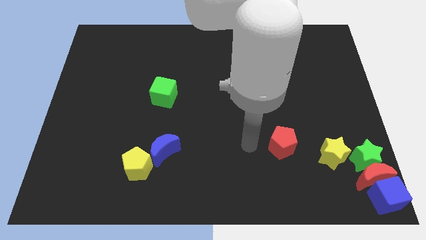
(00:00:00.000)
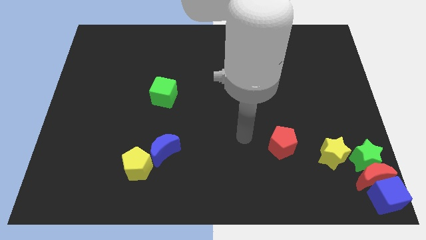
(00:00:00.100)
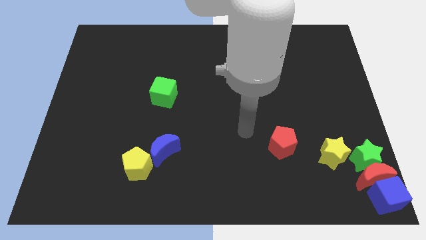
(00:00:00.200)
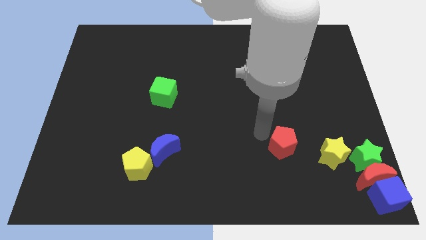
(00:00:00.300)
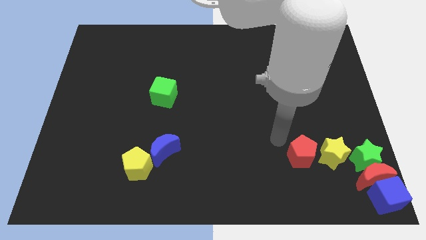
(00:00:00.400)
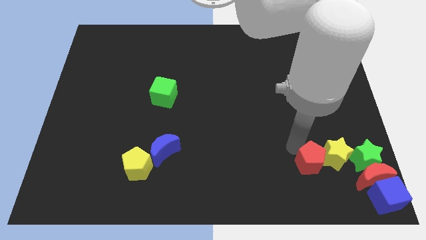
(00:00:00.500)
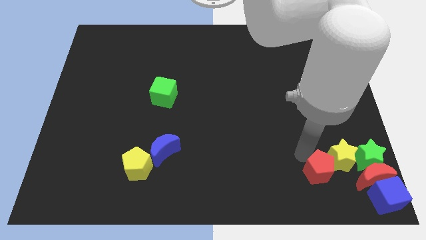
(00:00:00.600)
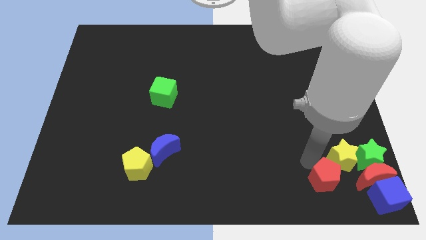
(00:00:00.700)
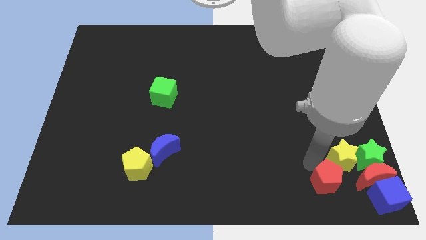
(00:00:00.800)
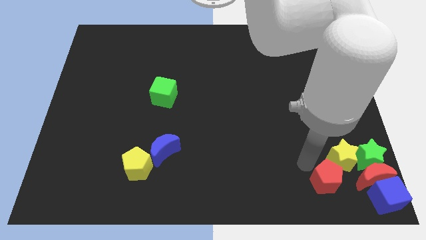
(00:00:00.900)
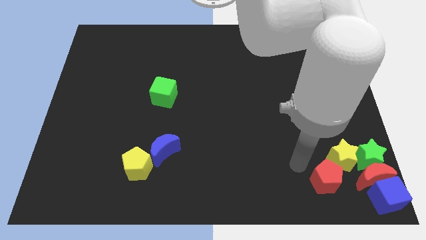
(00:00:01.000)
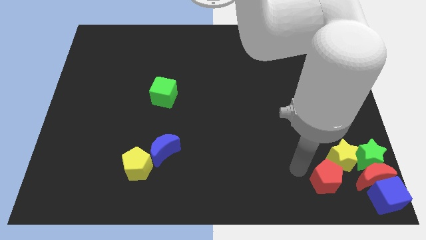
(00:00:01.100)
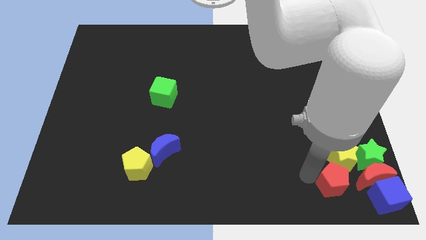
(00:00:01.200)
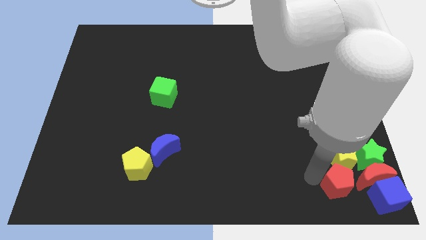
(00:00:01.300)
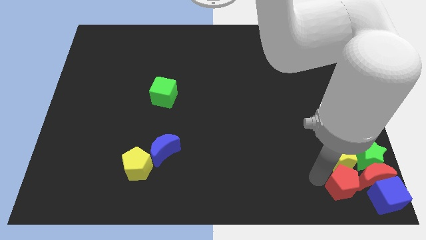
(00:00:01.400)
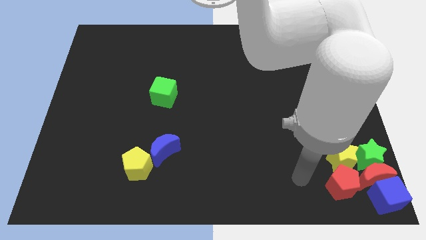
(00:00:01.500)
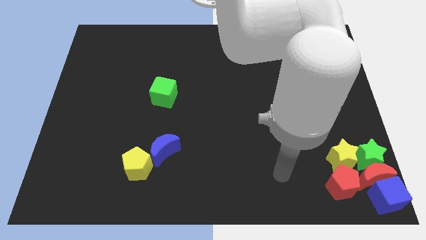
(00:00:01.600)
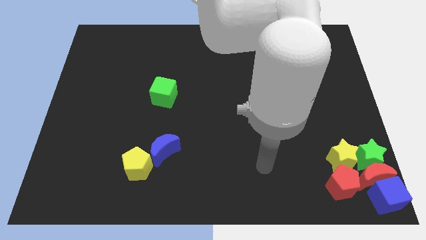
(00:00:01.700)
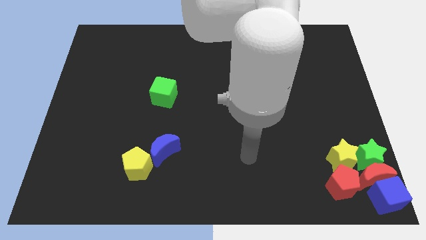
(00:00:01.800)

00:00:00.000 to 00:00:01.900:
push the red pentagon towards the bottom right corner of the board

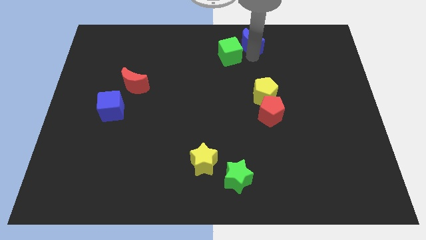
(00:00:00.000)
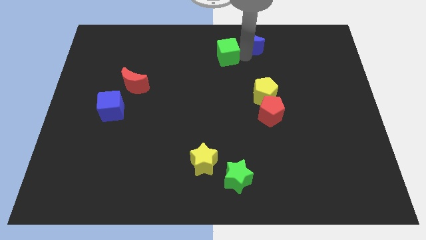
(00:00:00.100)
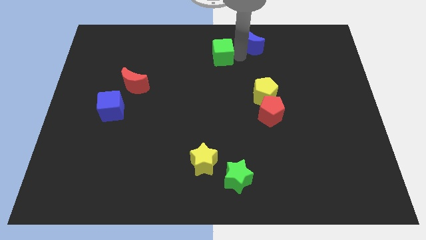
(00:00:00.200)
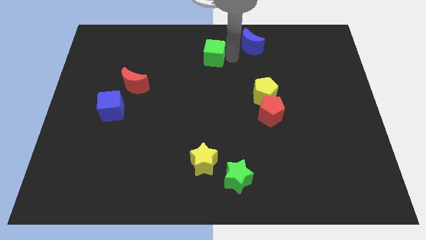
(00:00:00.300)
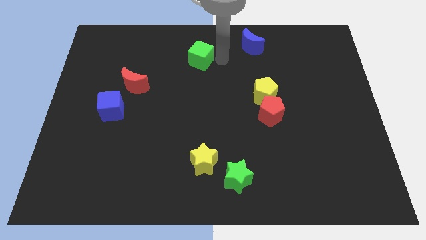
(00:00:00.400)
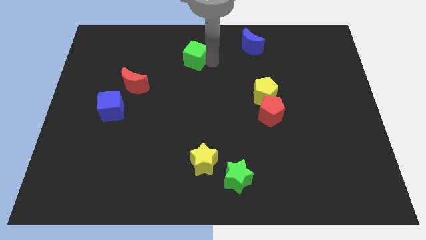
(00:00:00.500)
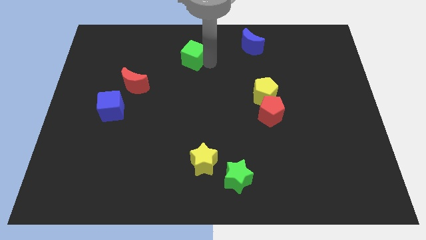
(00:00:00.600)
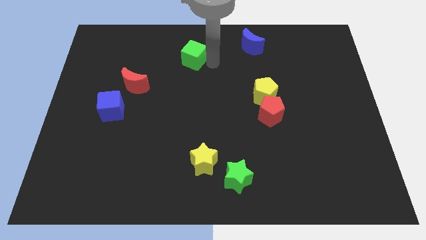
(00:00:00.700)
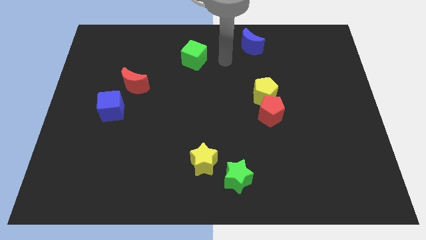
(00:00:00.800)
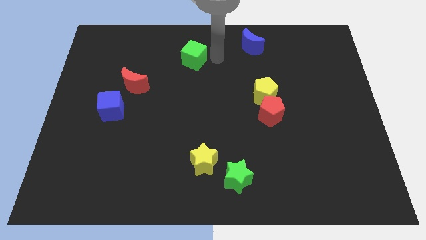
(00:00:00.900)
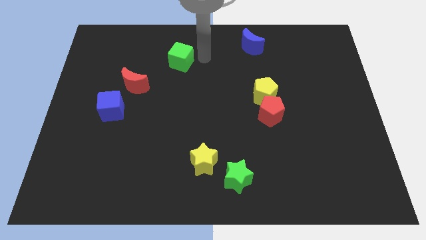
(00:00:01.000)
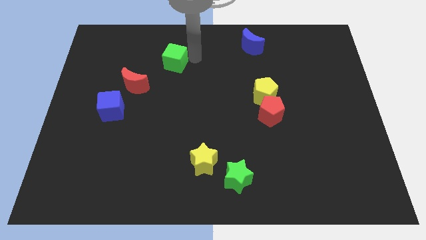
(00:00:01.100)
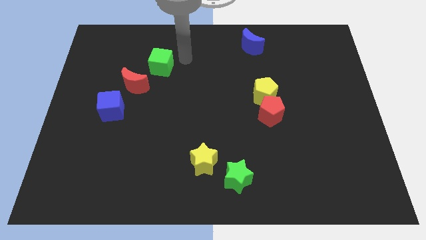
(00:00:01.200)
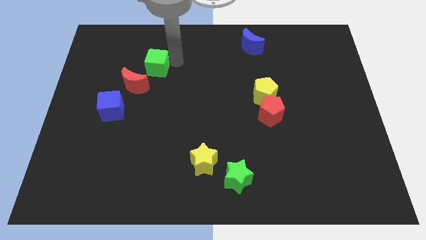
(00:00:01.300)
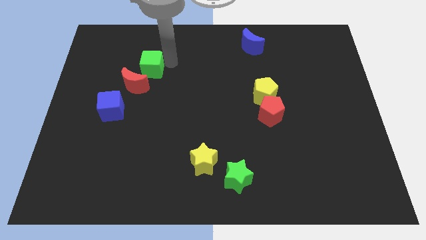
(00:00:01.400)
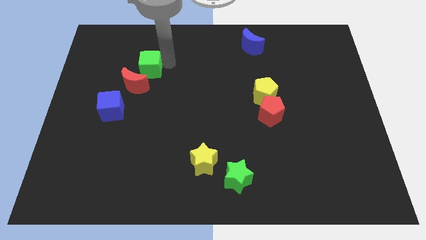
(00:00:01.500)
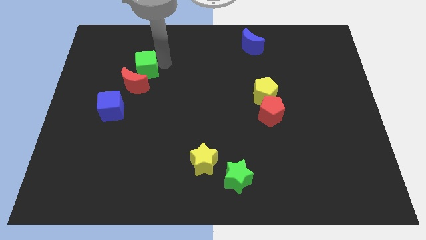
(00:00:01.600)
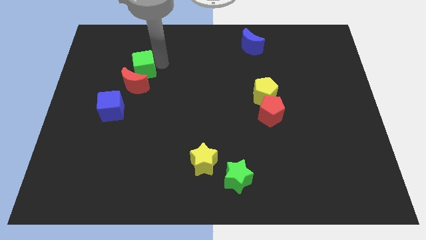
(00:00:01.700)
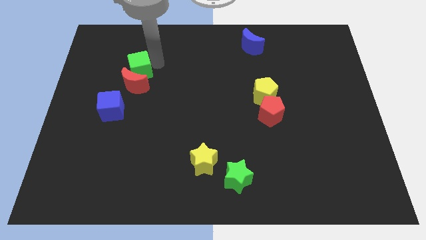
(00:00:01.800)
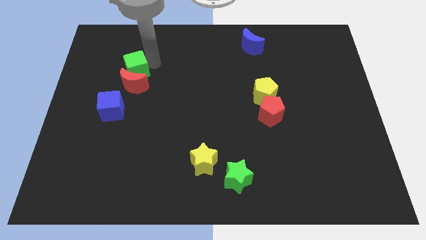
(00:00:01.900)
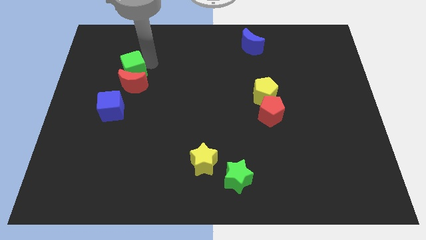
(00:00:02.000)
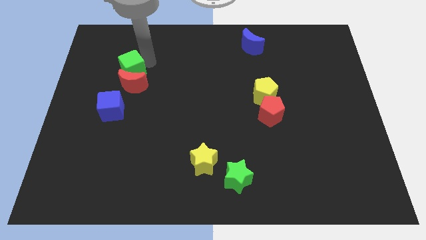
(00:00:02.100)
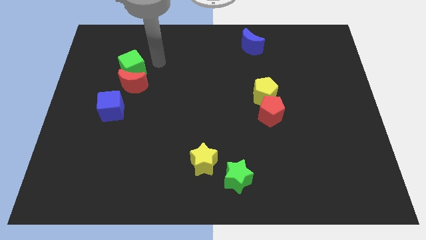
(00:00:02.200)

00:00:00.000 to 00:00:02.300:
push the green cube into the red moon

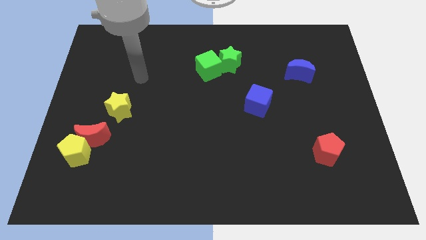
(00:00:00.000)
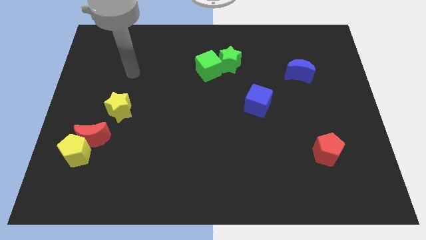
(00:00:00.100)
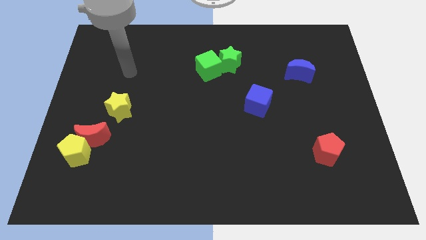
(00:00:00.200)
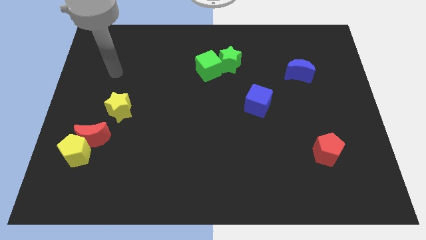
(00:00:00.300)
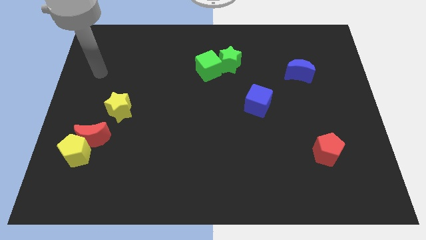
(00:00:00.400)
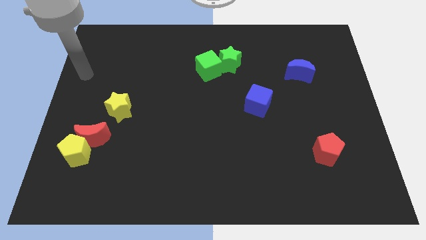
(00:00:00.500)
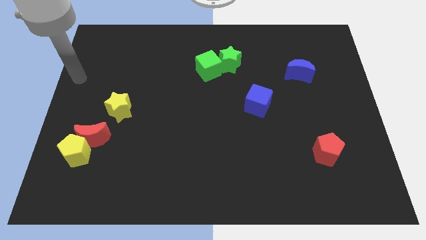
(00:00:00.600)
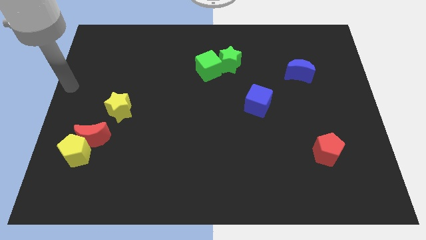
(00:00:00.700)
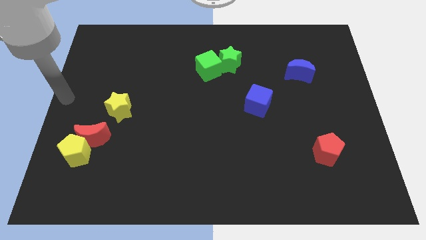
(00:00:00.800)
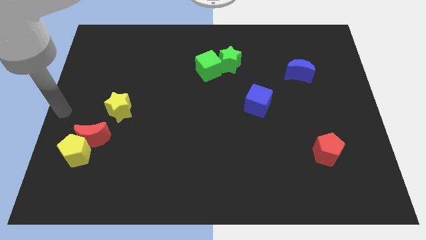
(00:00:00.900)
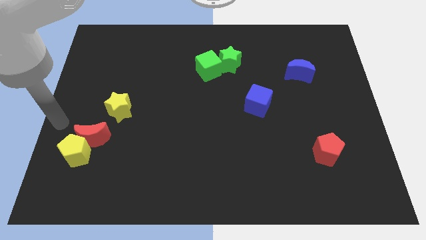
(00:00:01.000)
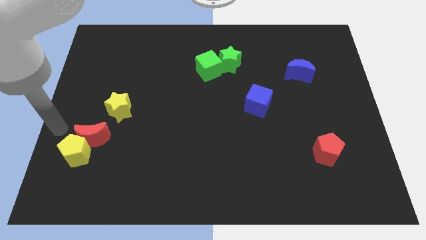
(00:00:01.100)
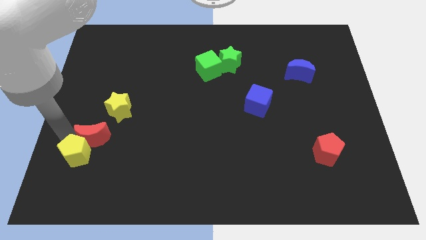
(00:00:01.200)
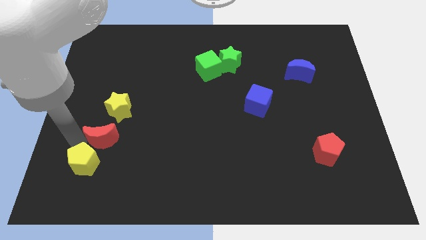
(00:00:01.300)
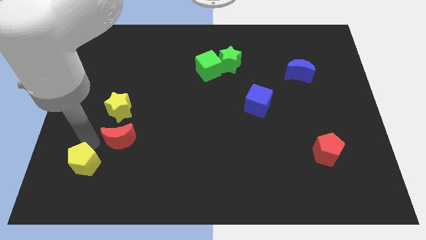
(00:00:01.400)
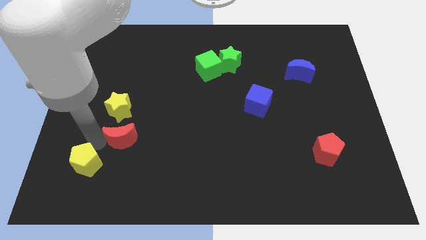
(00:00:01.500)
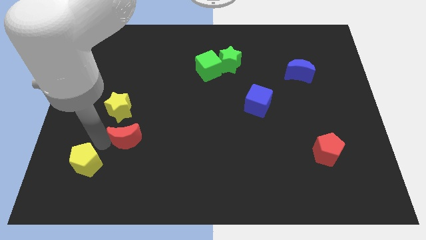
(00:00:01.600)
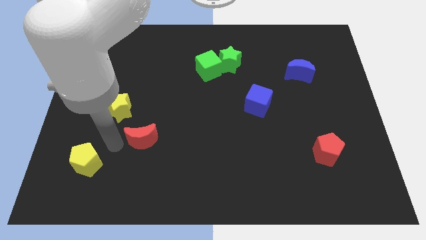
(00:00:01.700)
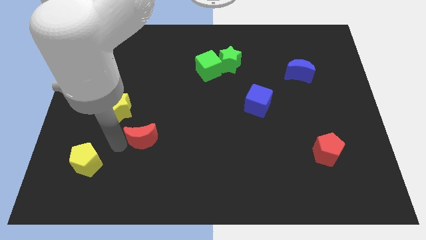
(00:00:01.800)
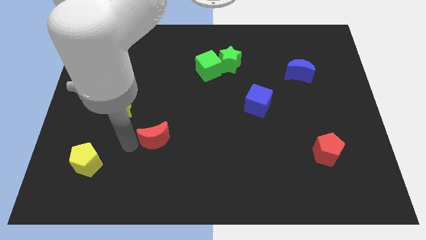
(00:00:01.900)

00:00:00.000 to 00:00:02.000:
separate red moon from yellow star and pentagon

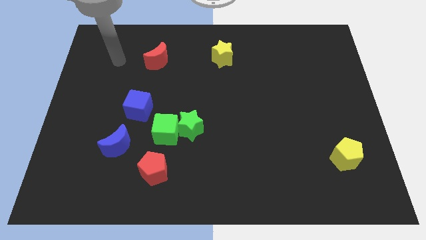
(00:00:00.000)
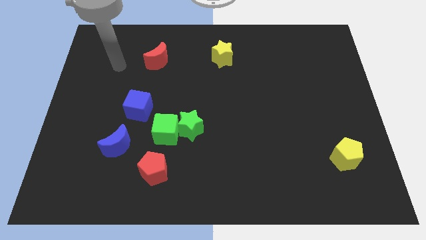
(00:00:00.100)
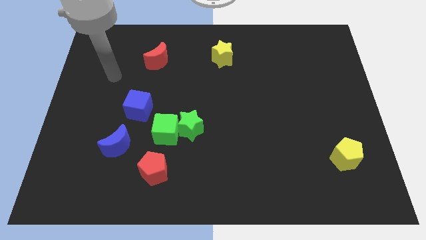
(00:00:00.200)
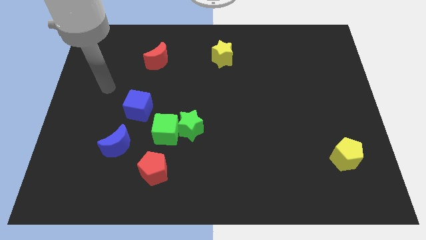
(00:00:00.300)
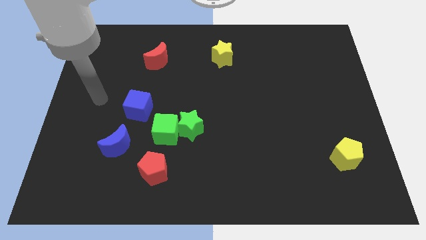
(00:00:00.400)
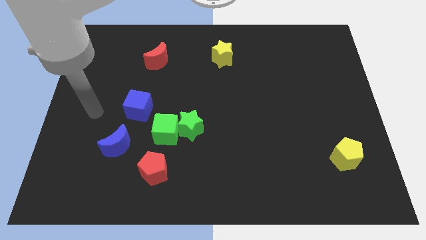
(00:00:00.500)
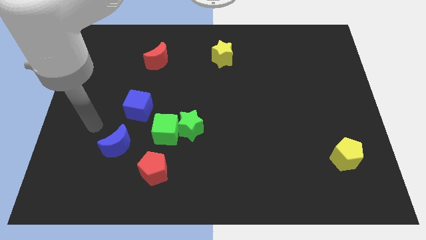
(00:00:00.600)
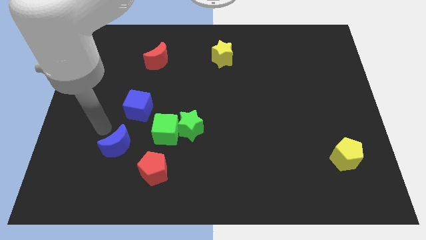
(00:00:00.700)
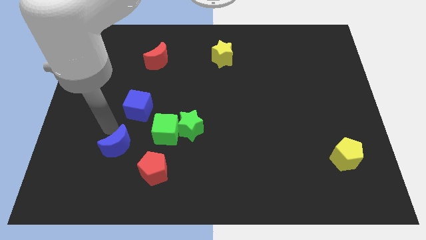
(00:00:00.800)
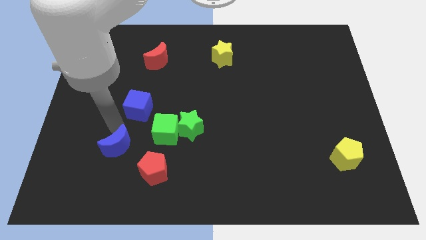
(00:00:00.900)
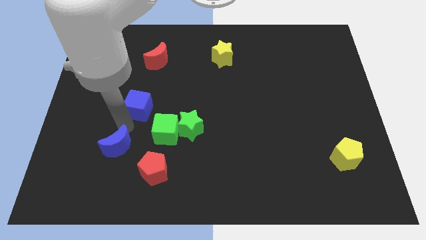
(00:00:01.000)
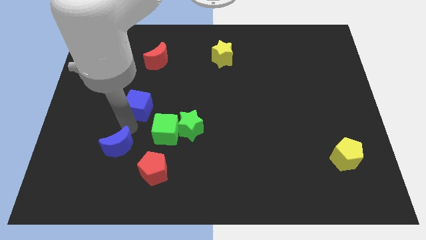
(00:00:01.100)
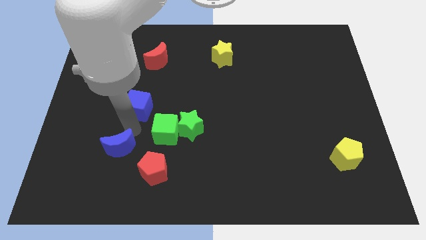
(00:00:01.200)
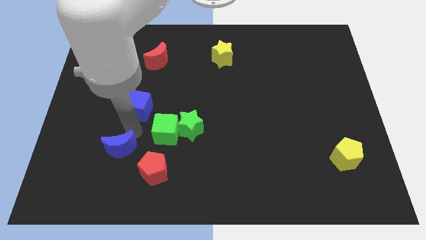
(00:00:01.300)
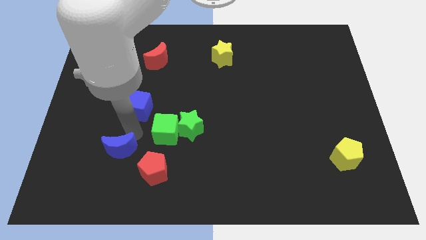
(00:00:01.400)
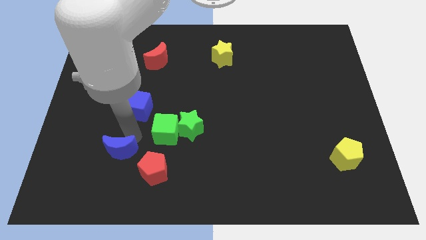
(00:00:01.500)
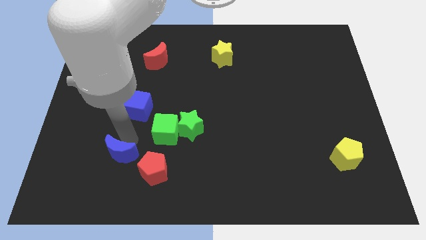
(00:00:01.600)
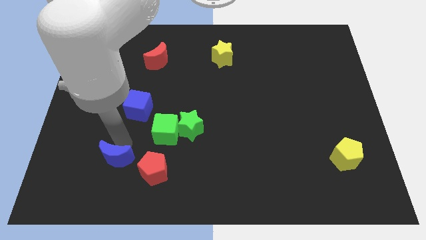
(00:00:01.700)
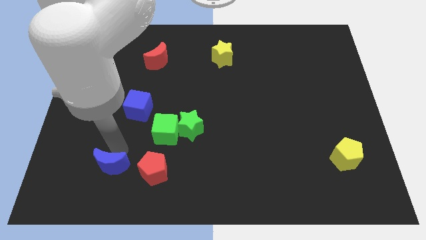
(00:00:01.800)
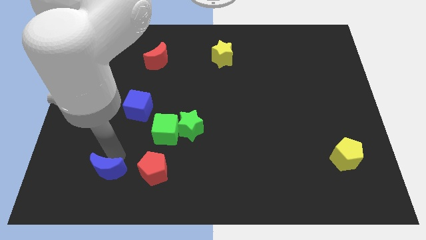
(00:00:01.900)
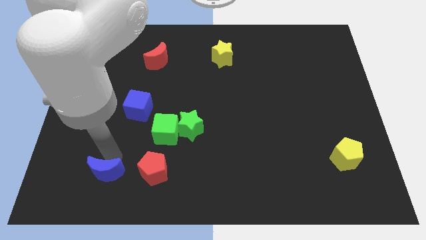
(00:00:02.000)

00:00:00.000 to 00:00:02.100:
move the blue crescent to the left of the red pentagon

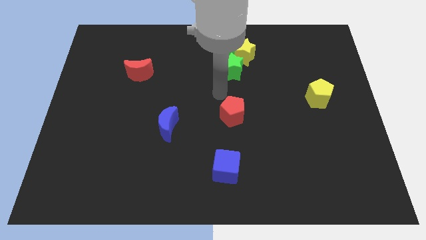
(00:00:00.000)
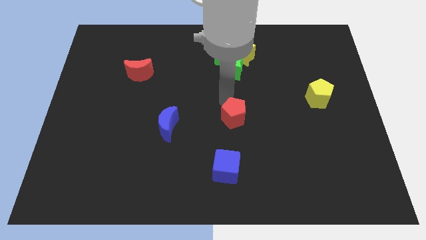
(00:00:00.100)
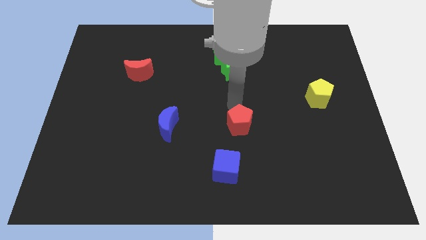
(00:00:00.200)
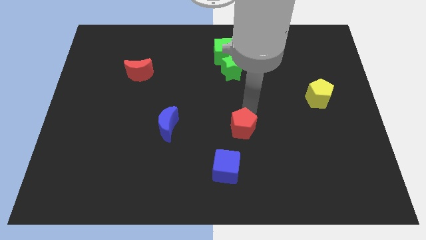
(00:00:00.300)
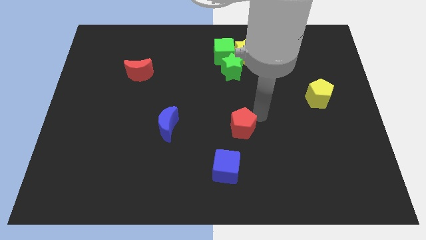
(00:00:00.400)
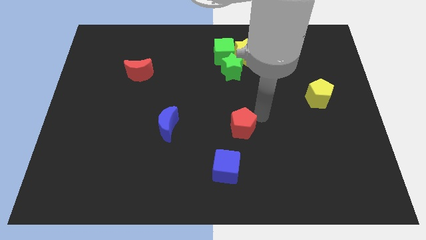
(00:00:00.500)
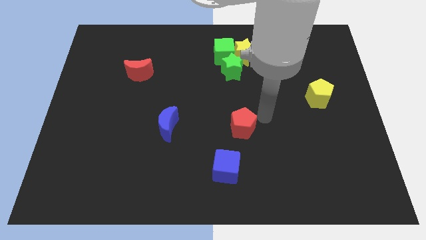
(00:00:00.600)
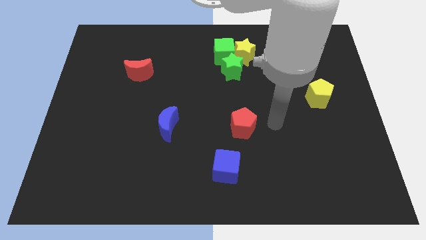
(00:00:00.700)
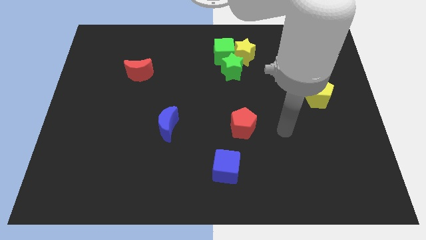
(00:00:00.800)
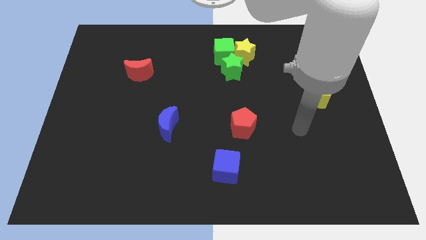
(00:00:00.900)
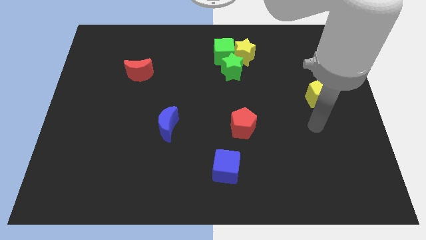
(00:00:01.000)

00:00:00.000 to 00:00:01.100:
tap at the top side of the red pentagon
